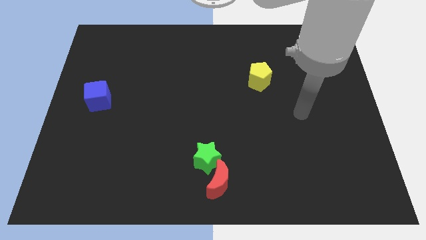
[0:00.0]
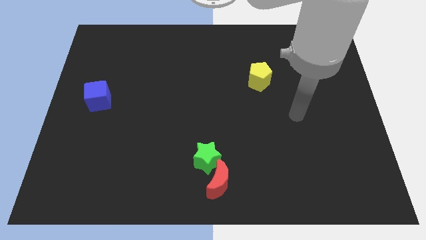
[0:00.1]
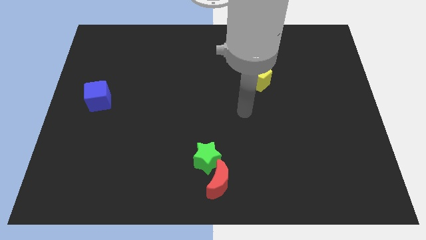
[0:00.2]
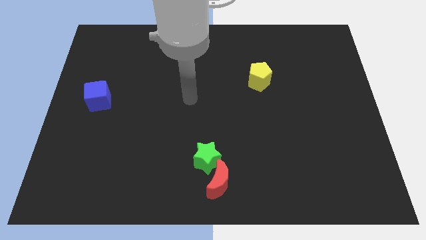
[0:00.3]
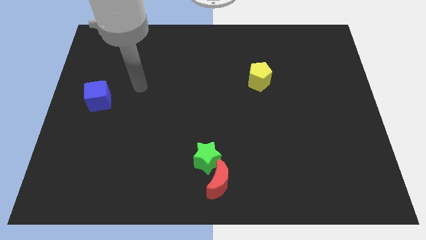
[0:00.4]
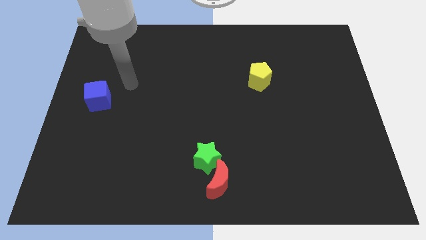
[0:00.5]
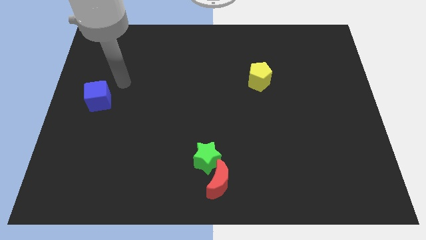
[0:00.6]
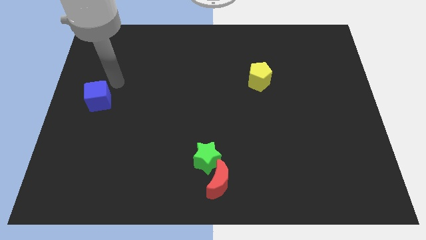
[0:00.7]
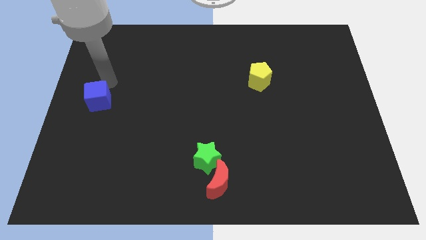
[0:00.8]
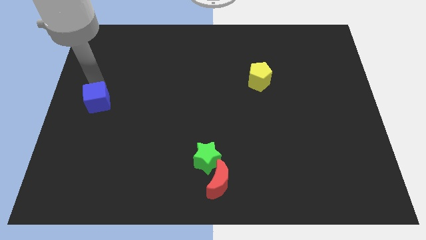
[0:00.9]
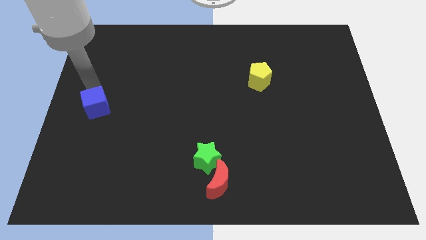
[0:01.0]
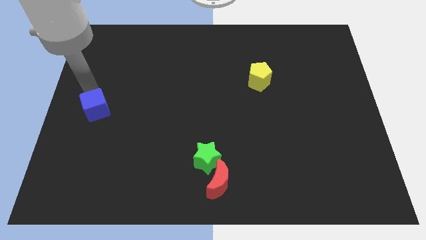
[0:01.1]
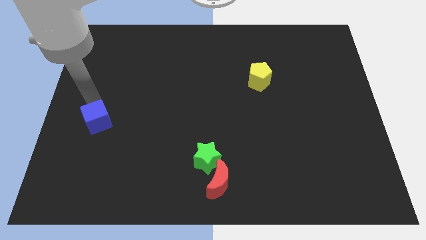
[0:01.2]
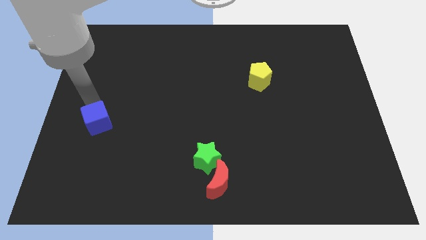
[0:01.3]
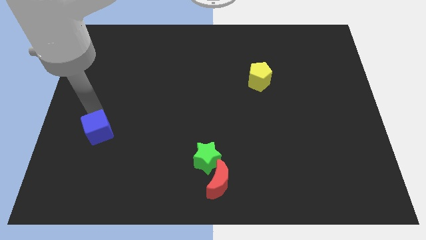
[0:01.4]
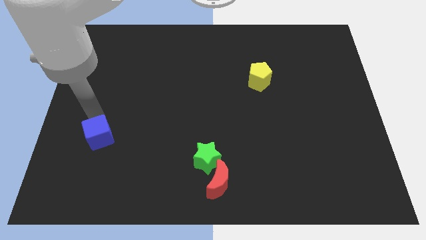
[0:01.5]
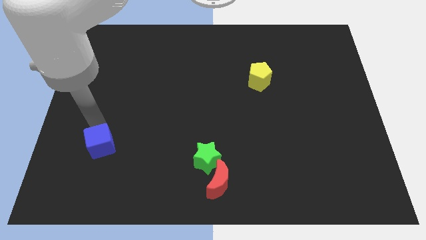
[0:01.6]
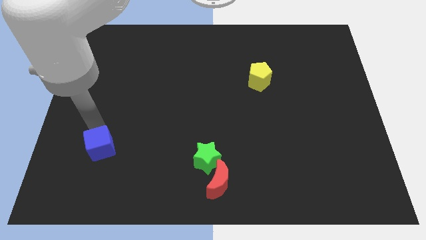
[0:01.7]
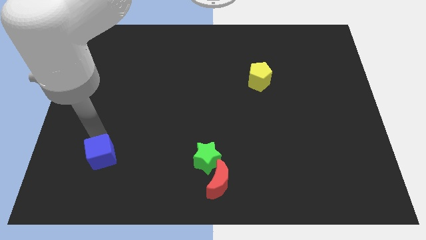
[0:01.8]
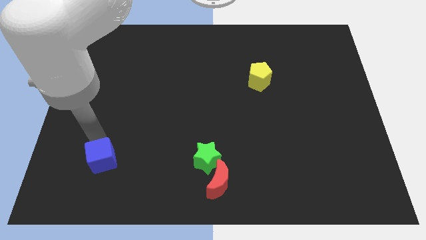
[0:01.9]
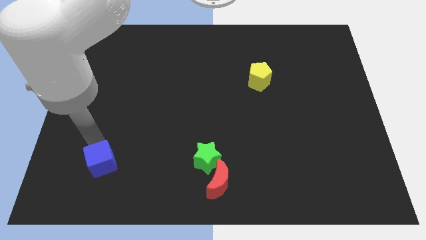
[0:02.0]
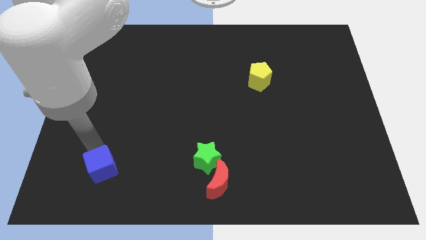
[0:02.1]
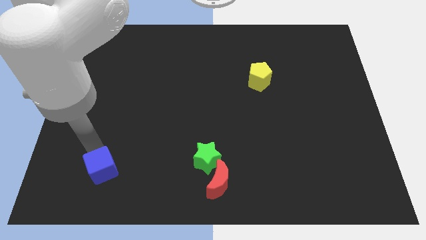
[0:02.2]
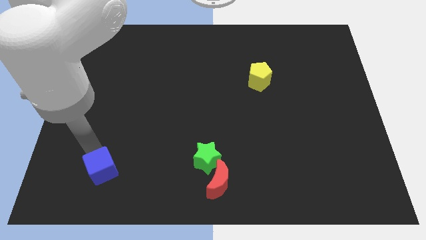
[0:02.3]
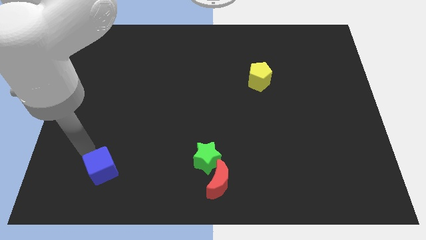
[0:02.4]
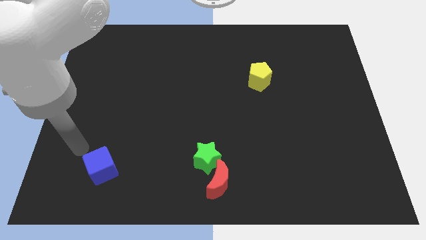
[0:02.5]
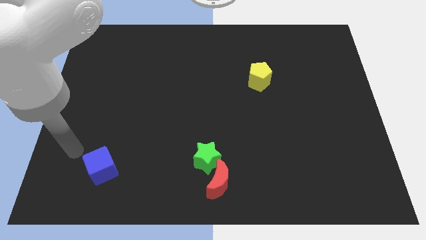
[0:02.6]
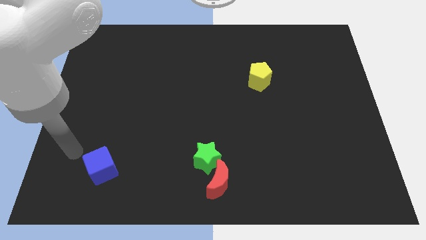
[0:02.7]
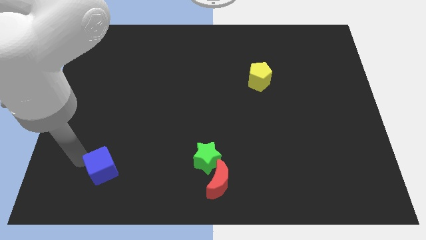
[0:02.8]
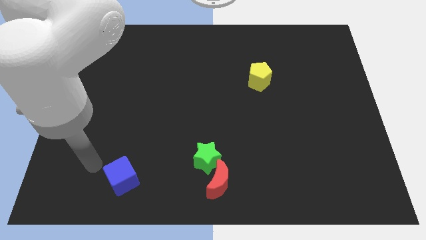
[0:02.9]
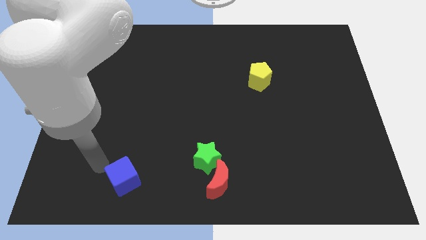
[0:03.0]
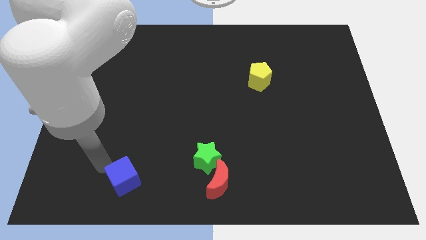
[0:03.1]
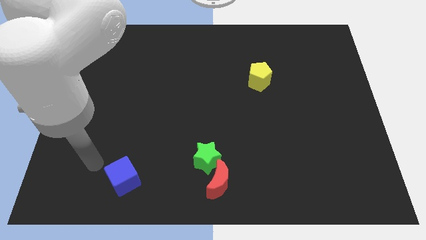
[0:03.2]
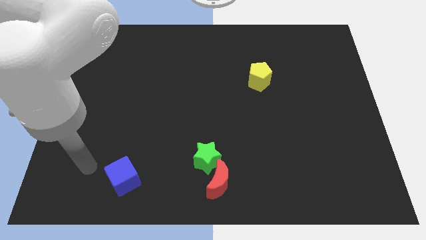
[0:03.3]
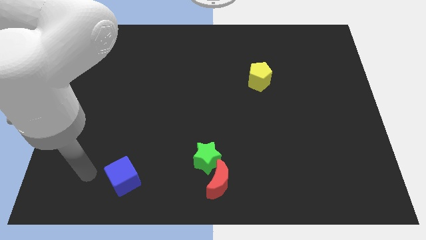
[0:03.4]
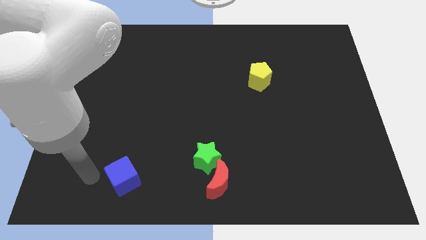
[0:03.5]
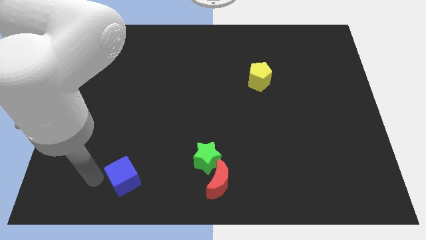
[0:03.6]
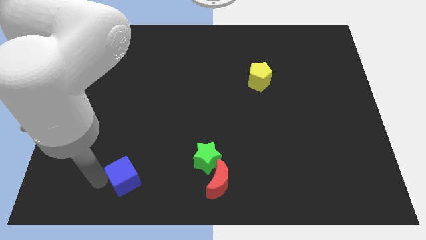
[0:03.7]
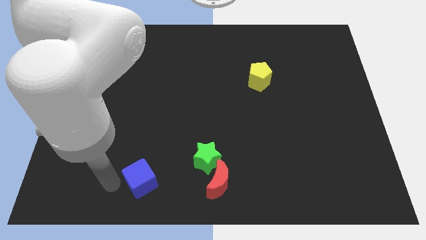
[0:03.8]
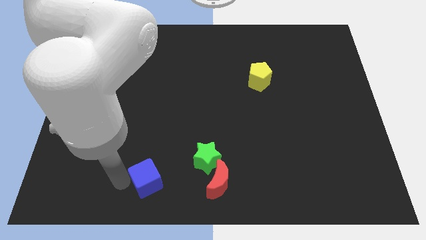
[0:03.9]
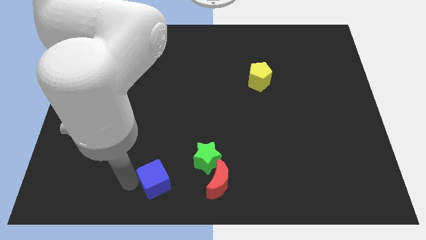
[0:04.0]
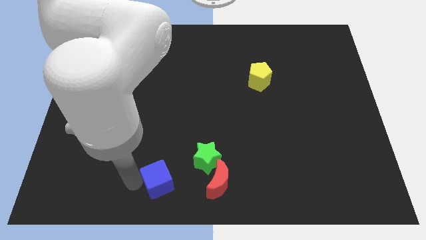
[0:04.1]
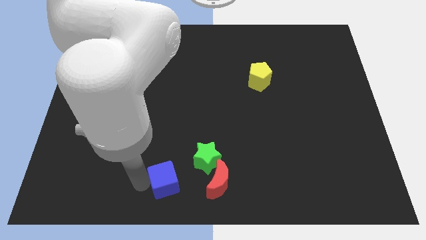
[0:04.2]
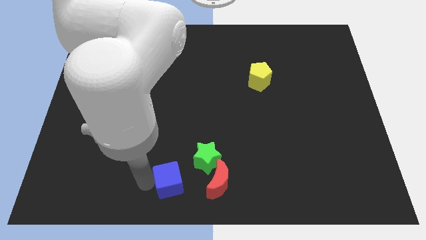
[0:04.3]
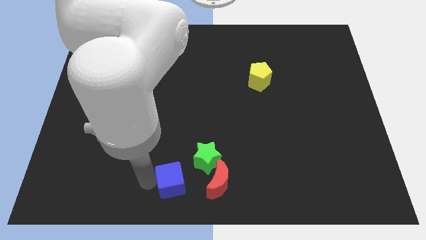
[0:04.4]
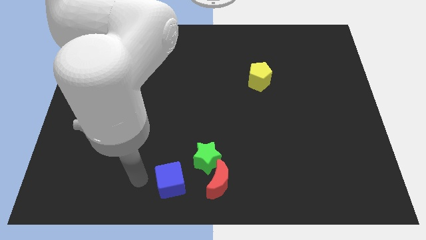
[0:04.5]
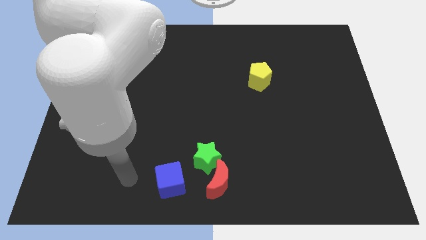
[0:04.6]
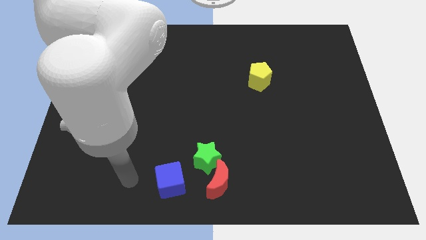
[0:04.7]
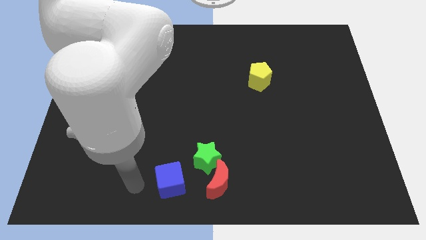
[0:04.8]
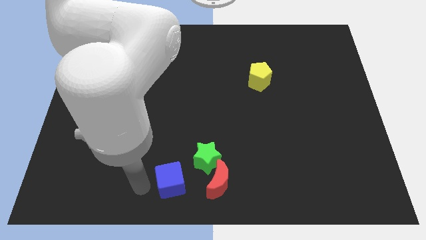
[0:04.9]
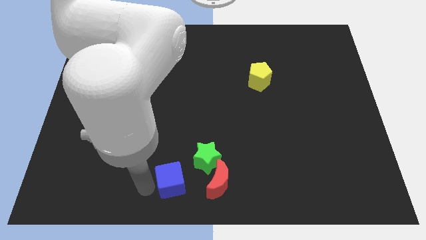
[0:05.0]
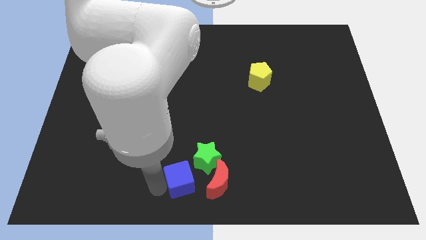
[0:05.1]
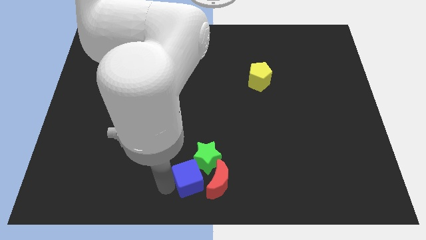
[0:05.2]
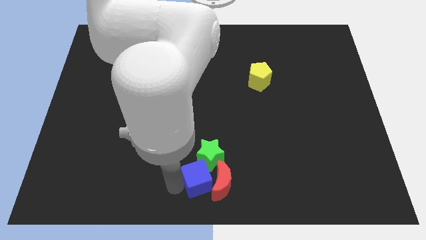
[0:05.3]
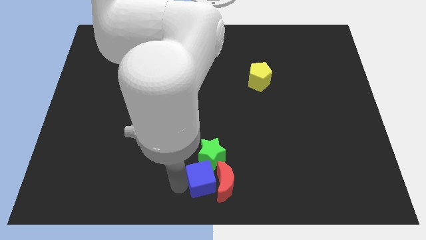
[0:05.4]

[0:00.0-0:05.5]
push the cube towards the red block

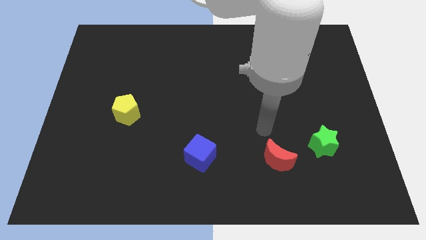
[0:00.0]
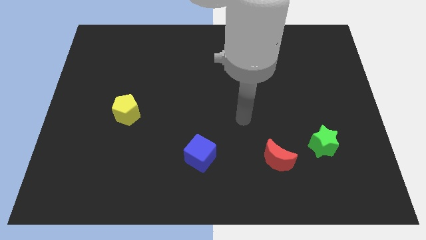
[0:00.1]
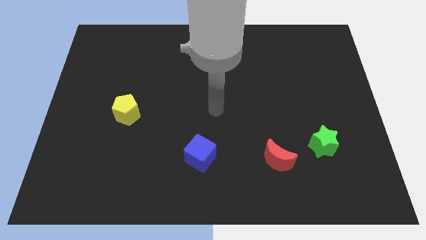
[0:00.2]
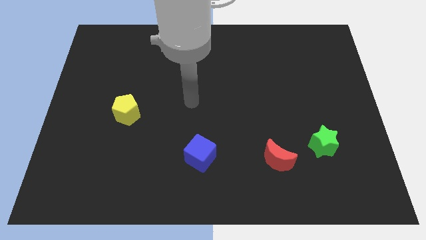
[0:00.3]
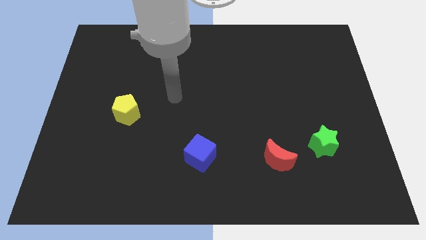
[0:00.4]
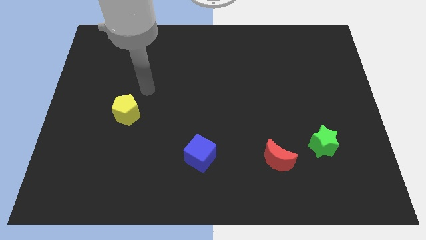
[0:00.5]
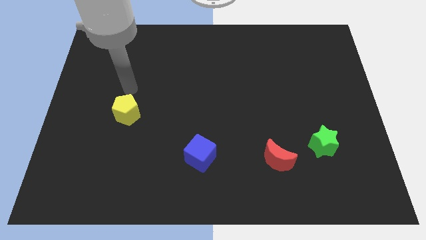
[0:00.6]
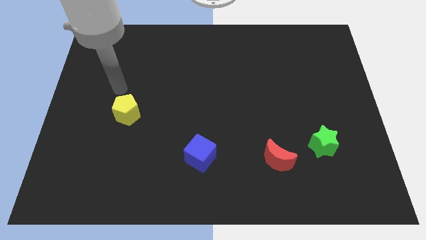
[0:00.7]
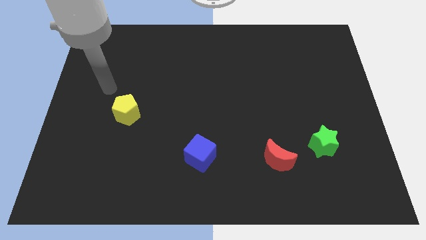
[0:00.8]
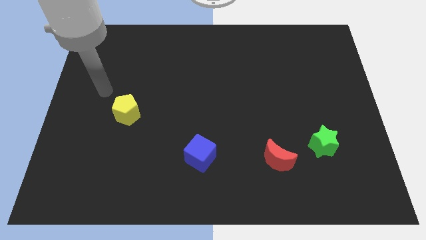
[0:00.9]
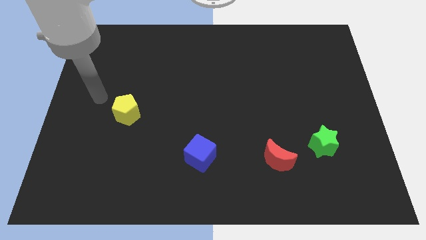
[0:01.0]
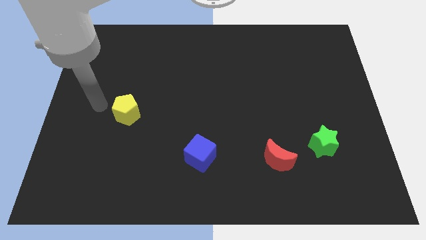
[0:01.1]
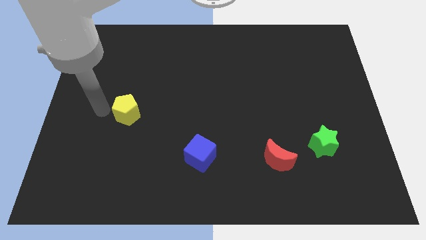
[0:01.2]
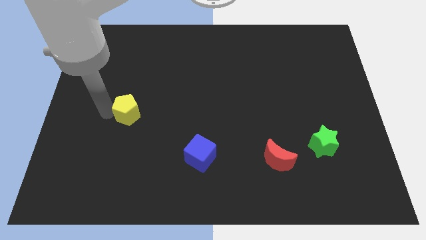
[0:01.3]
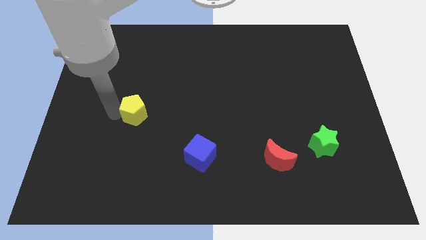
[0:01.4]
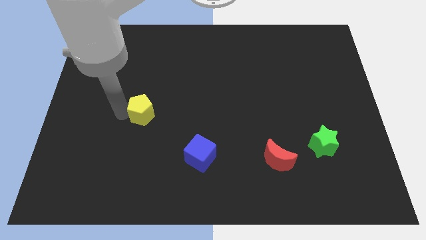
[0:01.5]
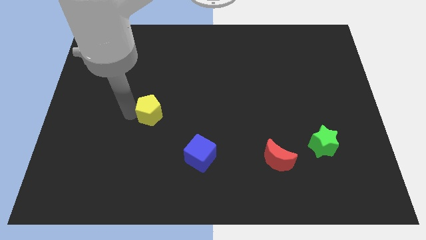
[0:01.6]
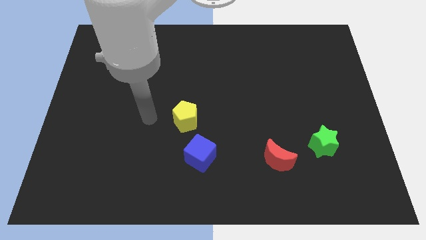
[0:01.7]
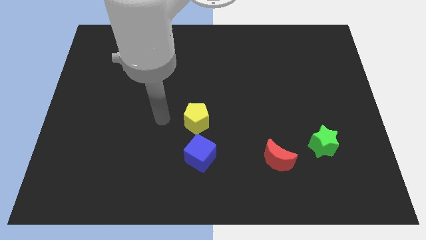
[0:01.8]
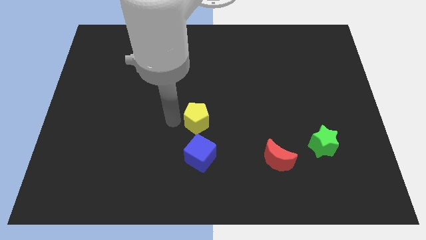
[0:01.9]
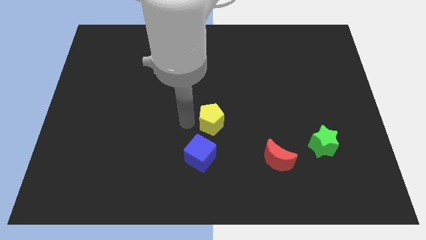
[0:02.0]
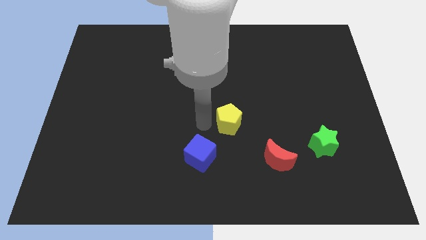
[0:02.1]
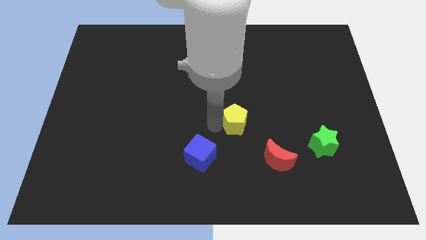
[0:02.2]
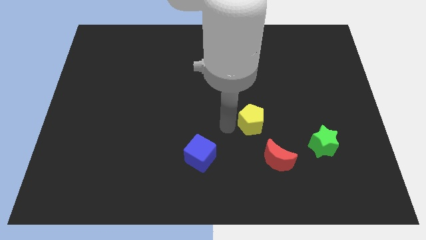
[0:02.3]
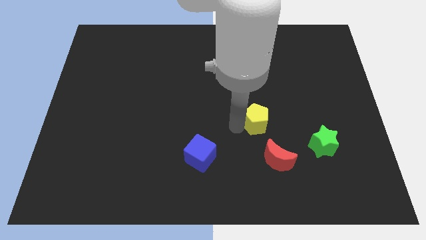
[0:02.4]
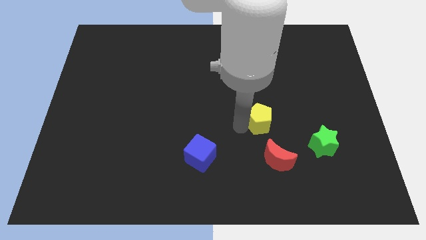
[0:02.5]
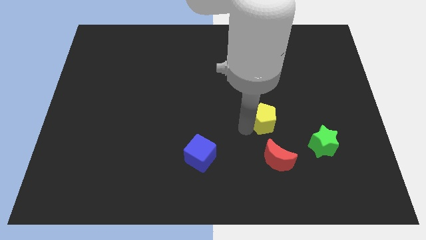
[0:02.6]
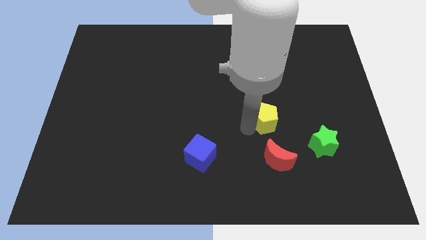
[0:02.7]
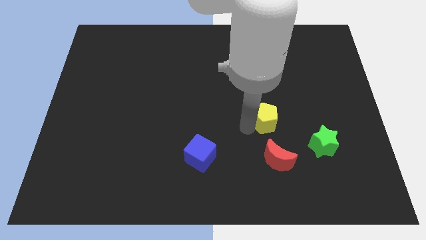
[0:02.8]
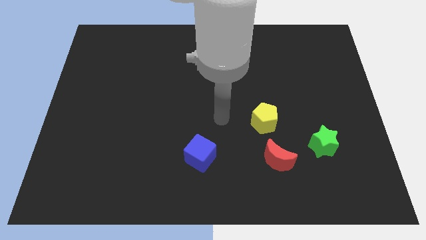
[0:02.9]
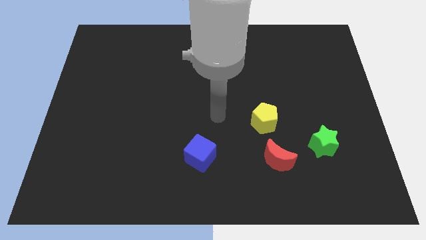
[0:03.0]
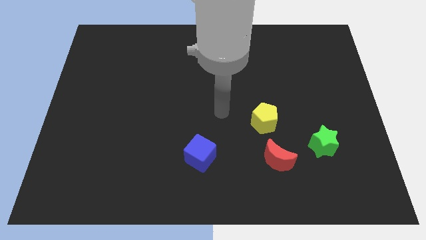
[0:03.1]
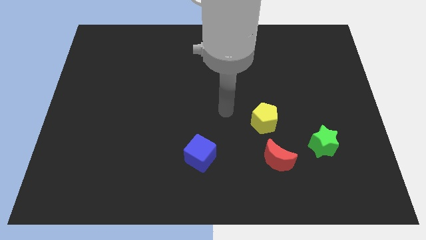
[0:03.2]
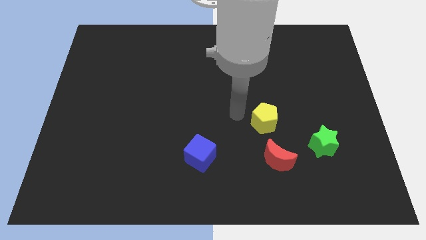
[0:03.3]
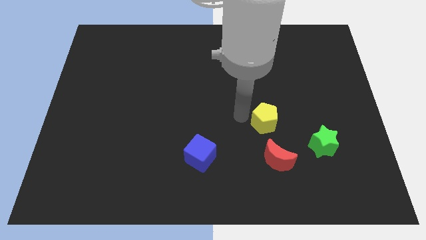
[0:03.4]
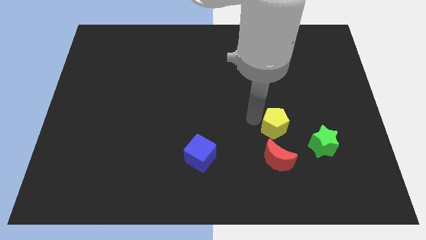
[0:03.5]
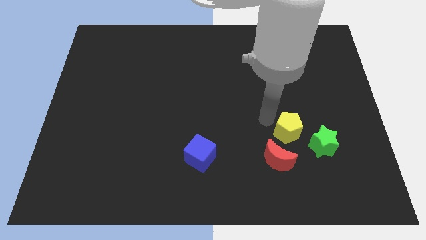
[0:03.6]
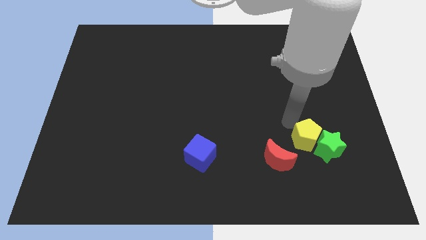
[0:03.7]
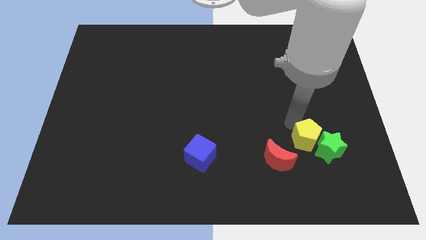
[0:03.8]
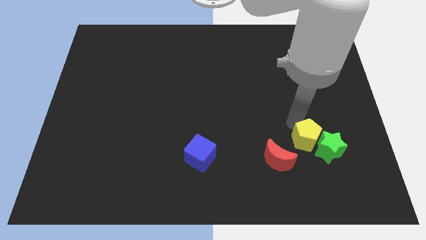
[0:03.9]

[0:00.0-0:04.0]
push the yellow block to the star
